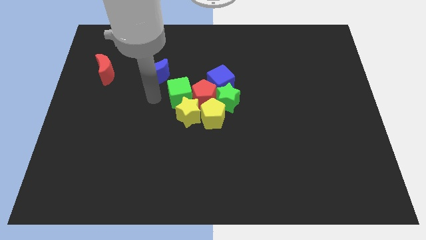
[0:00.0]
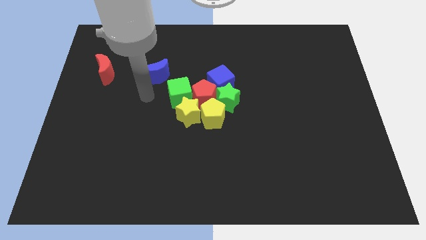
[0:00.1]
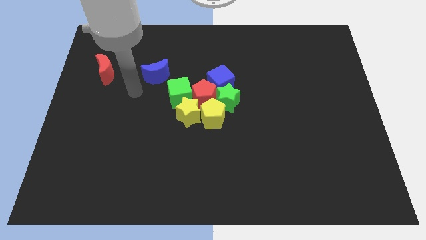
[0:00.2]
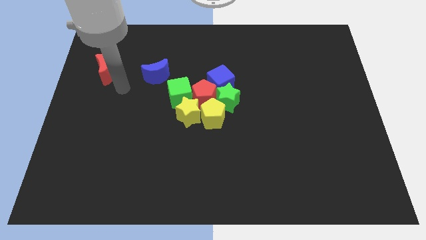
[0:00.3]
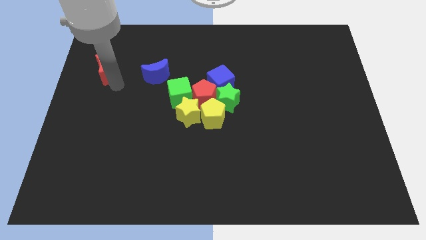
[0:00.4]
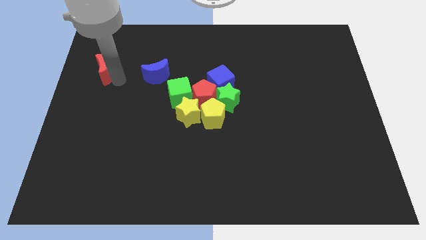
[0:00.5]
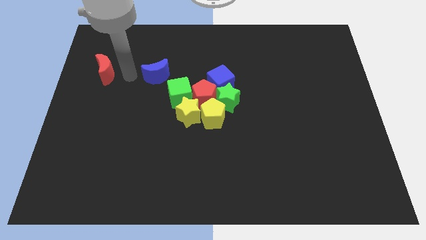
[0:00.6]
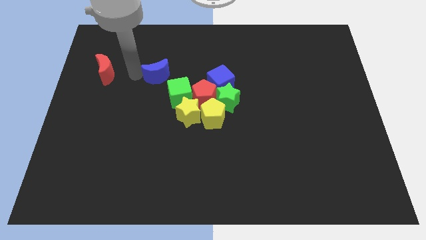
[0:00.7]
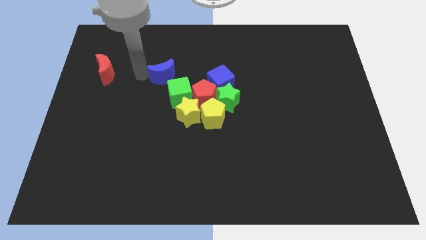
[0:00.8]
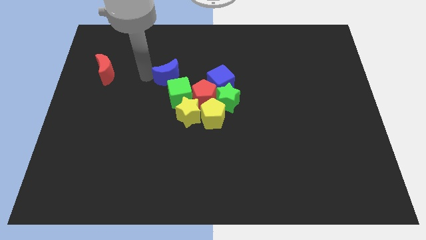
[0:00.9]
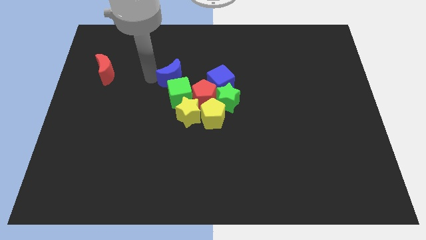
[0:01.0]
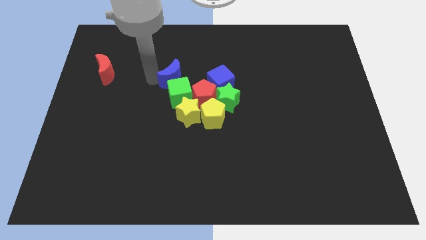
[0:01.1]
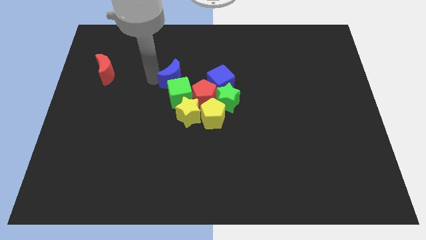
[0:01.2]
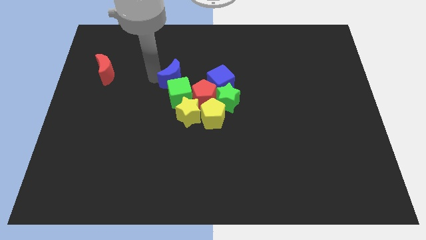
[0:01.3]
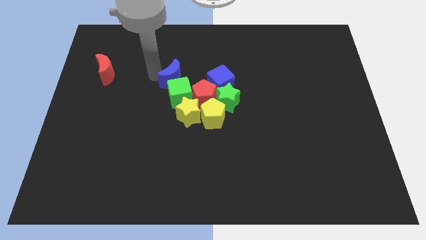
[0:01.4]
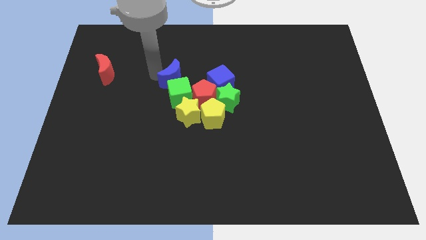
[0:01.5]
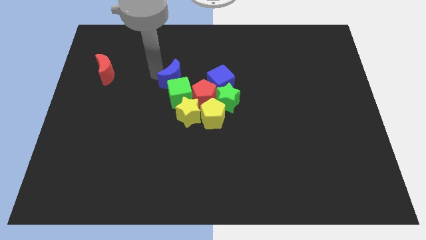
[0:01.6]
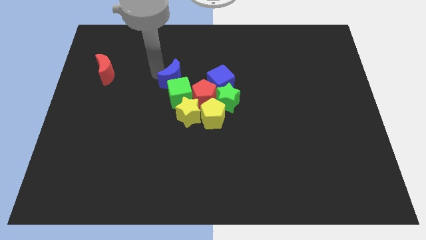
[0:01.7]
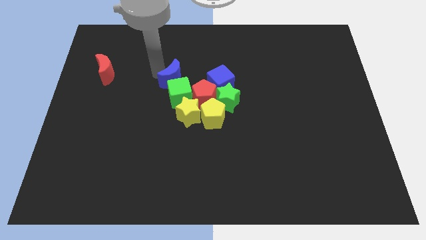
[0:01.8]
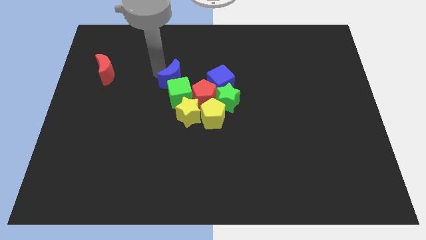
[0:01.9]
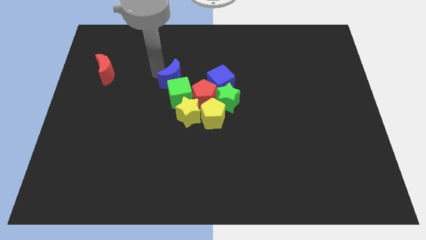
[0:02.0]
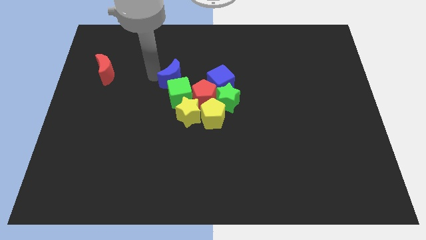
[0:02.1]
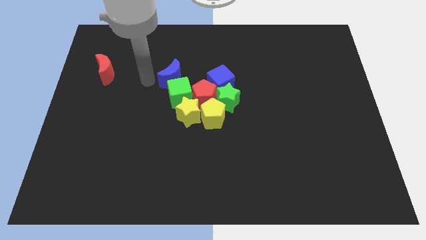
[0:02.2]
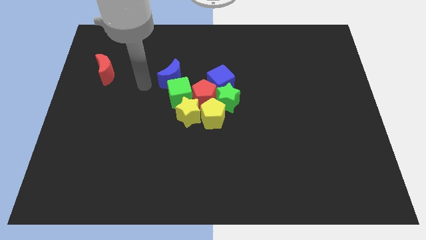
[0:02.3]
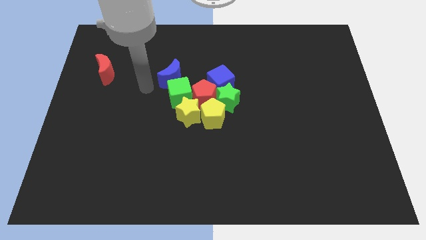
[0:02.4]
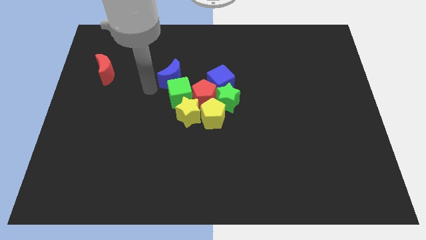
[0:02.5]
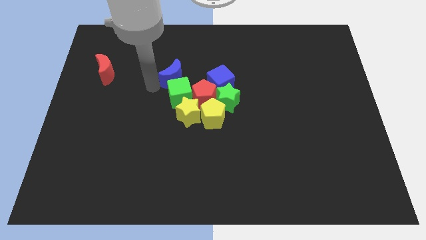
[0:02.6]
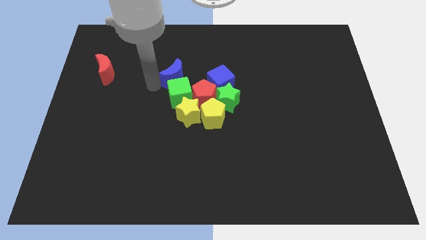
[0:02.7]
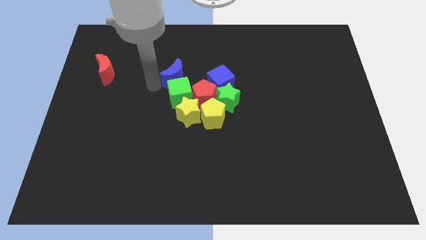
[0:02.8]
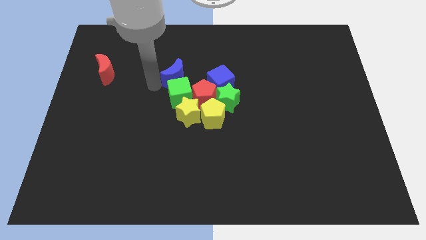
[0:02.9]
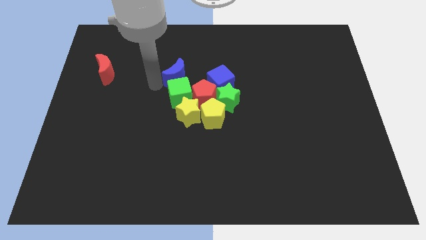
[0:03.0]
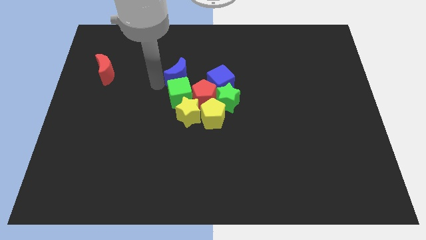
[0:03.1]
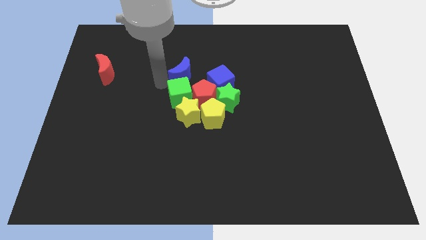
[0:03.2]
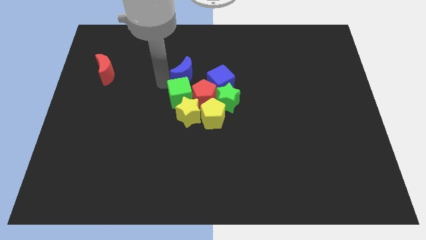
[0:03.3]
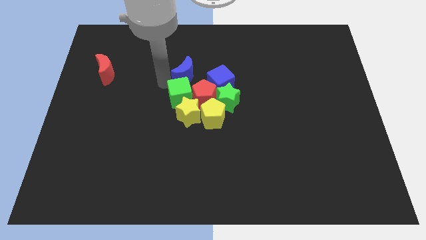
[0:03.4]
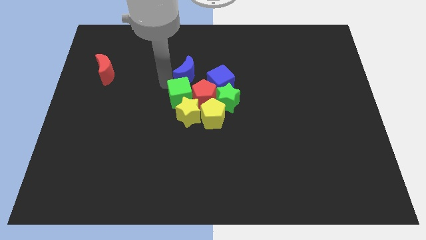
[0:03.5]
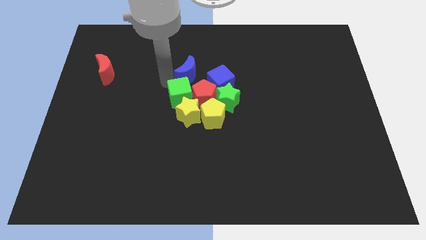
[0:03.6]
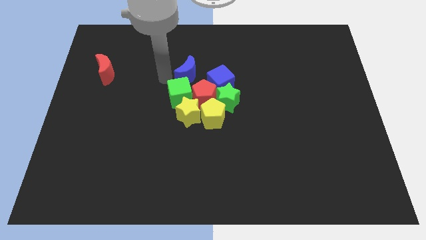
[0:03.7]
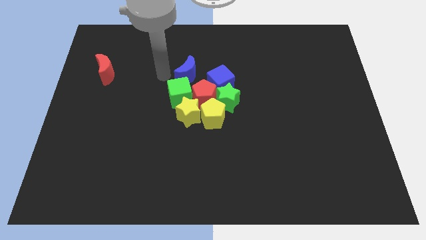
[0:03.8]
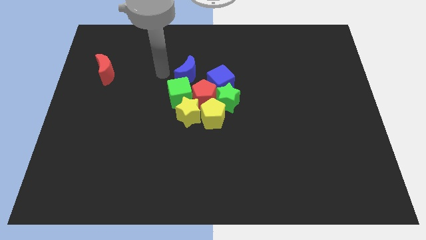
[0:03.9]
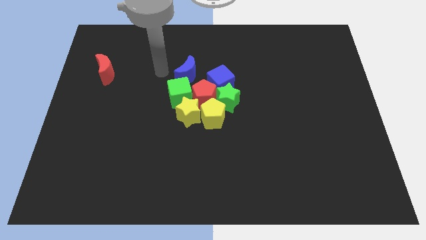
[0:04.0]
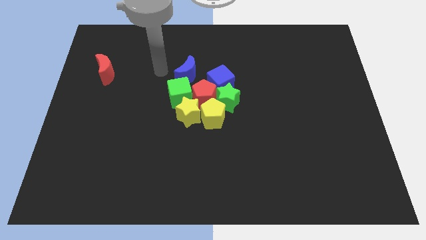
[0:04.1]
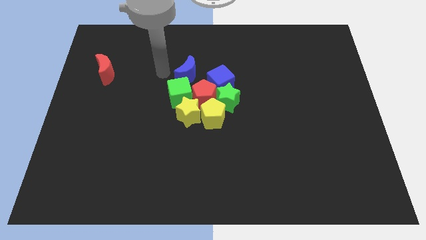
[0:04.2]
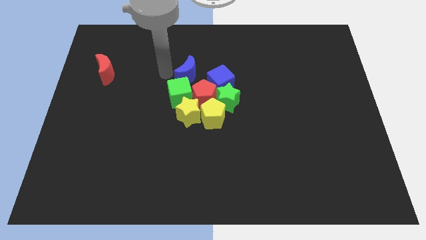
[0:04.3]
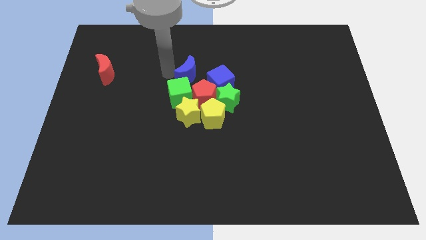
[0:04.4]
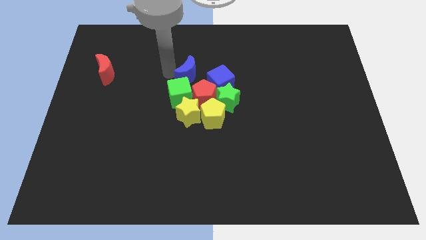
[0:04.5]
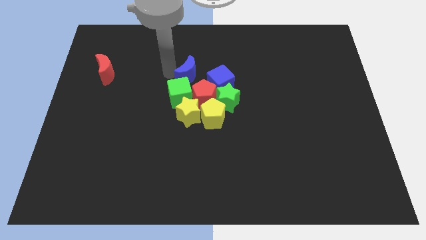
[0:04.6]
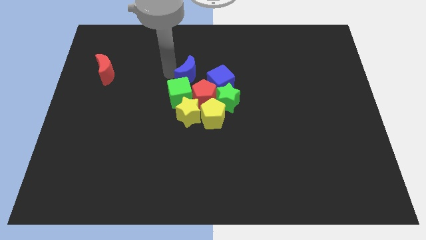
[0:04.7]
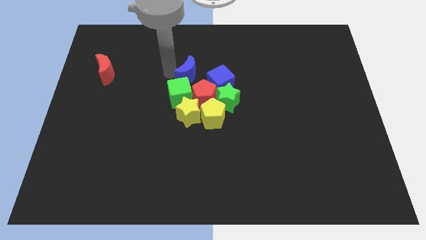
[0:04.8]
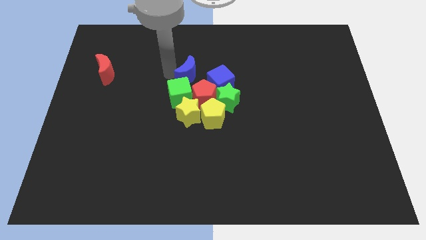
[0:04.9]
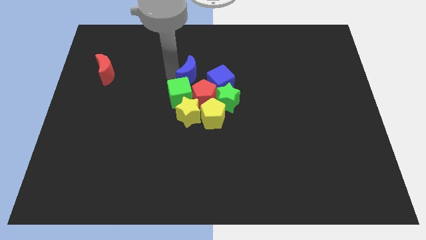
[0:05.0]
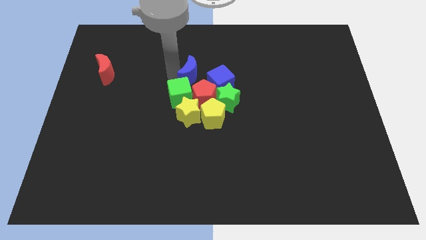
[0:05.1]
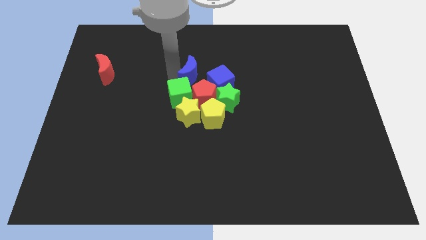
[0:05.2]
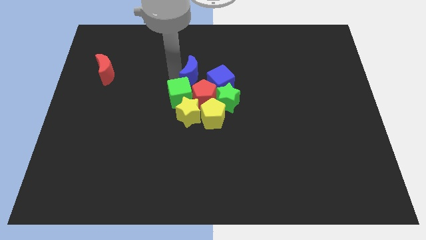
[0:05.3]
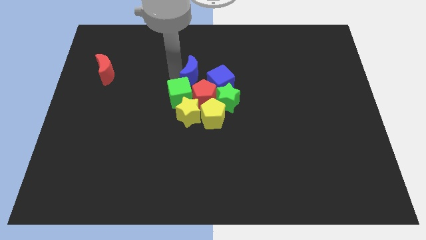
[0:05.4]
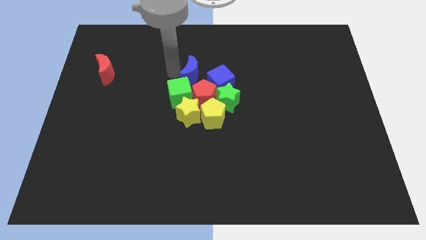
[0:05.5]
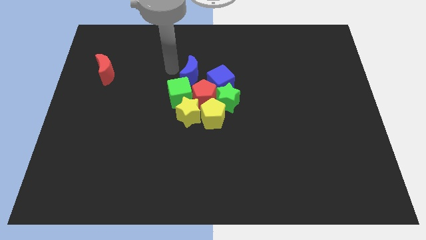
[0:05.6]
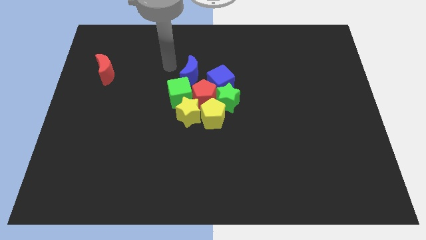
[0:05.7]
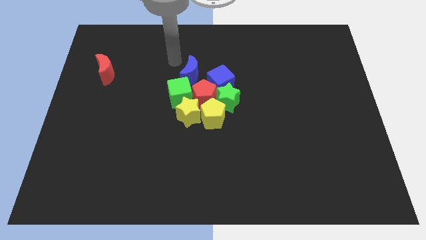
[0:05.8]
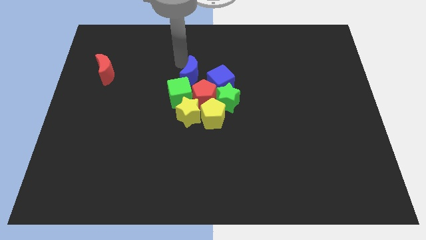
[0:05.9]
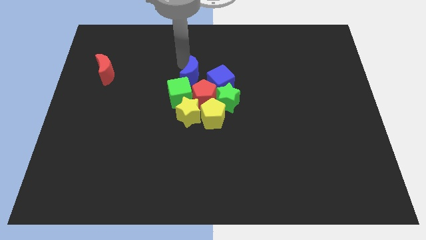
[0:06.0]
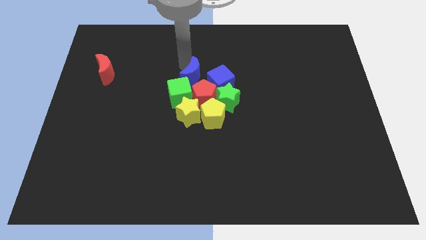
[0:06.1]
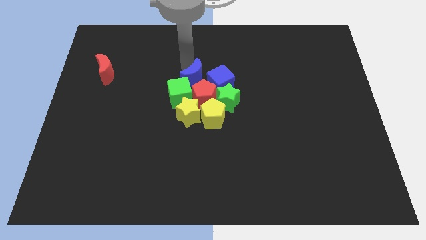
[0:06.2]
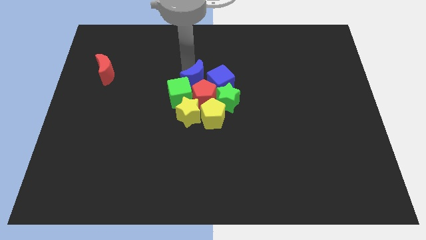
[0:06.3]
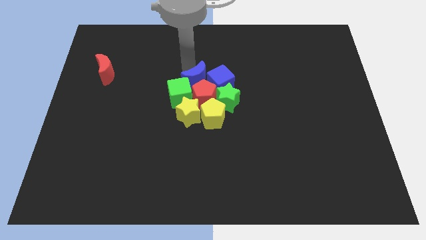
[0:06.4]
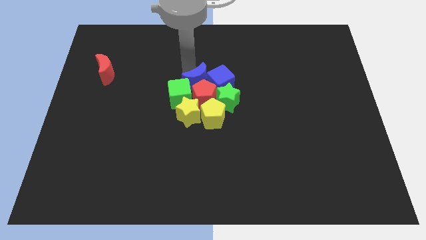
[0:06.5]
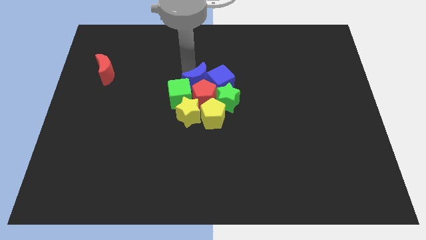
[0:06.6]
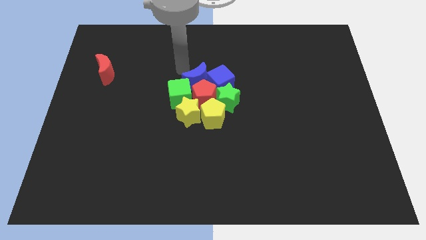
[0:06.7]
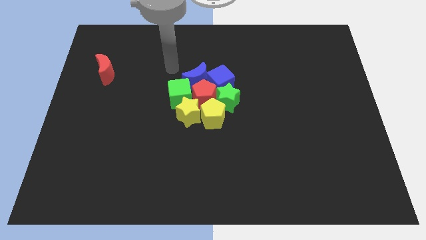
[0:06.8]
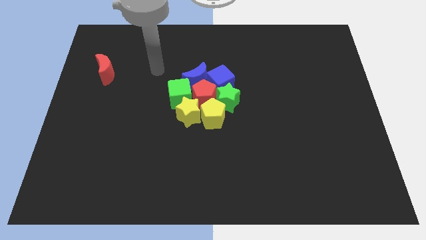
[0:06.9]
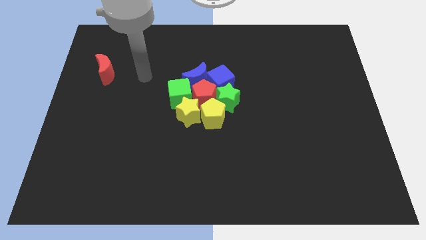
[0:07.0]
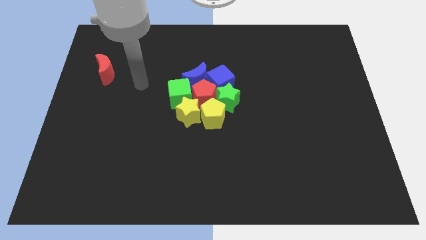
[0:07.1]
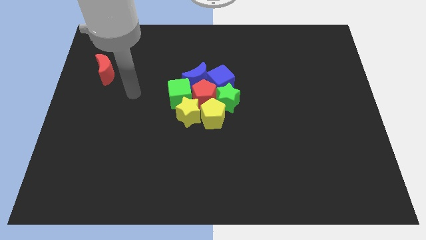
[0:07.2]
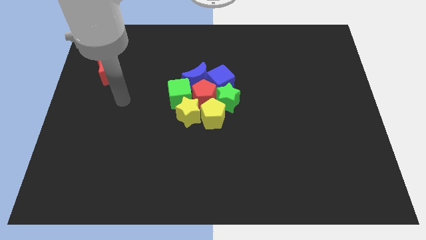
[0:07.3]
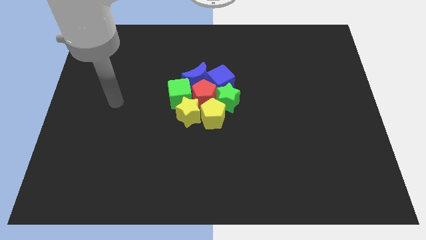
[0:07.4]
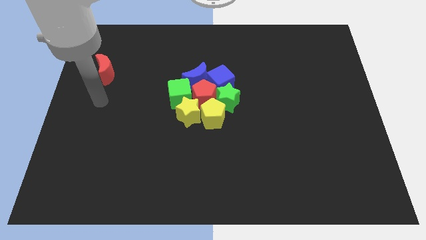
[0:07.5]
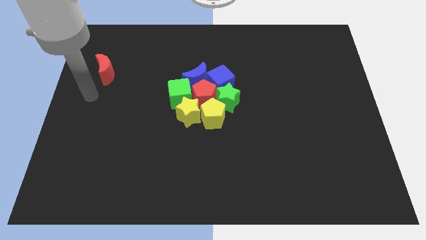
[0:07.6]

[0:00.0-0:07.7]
slide the blue moon into the red pentagon

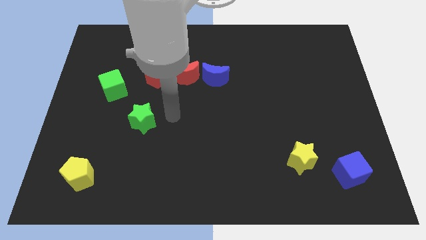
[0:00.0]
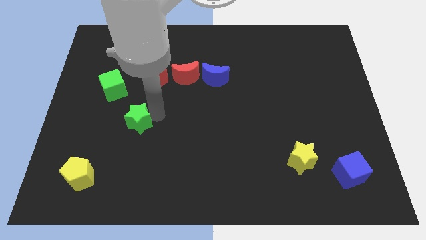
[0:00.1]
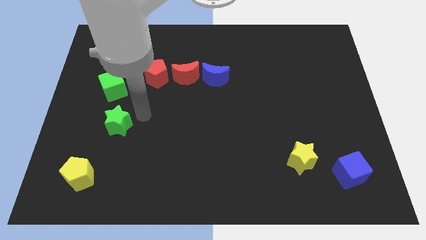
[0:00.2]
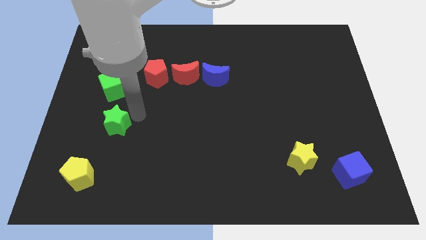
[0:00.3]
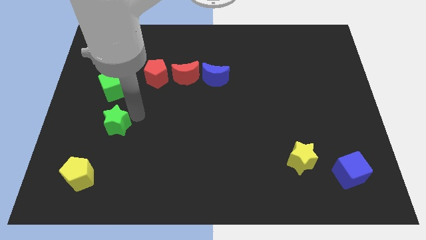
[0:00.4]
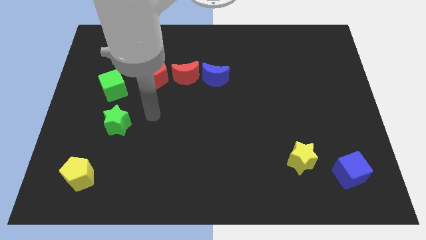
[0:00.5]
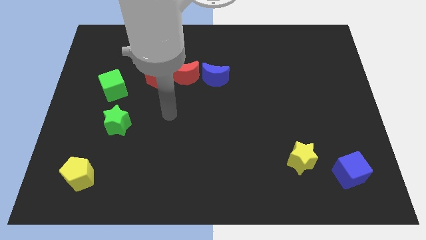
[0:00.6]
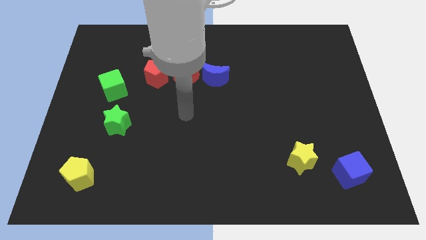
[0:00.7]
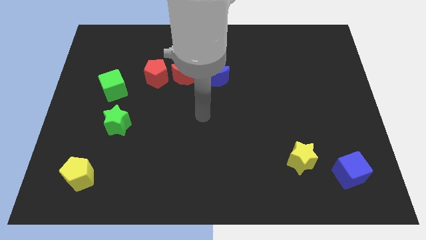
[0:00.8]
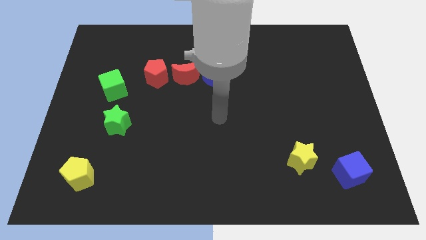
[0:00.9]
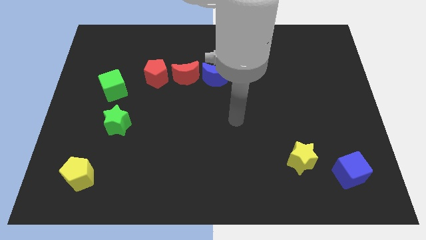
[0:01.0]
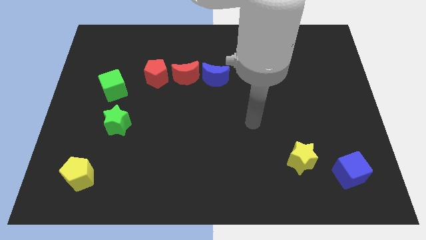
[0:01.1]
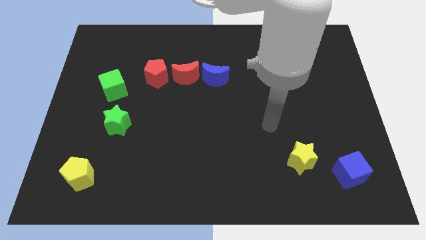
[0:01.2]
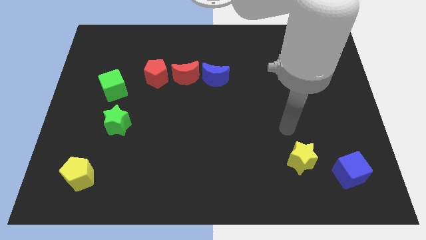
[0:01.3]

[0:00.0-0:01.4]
push the green star slightly towards the left
